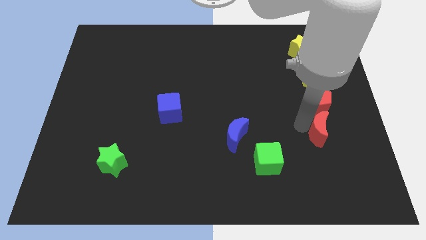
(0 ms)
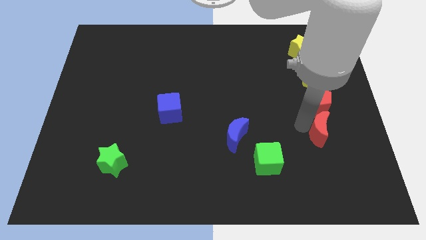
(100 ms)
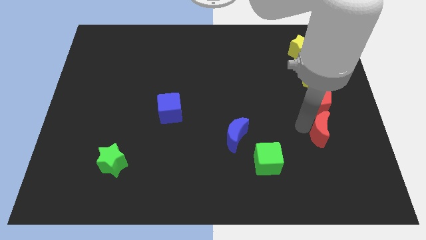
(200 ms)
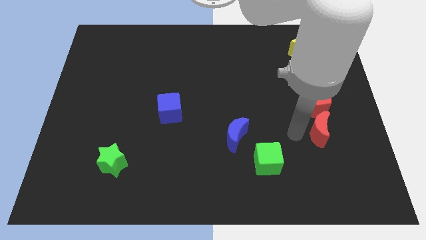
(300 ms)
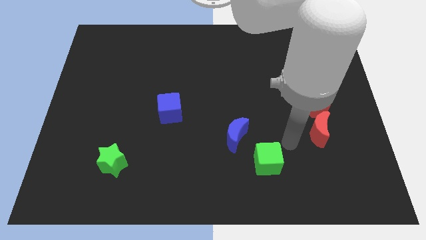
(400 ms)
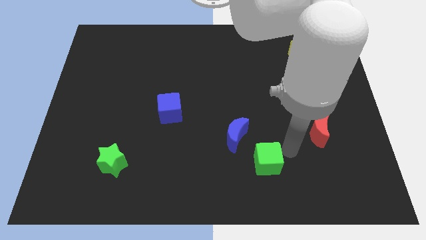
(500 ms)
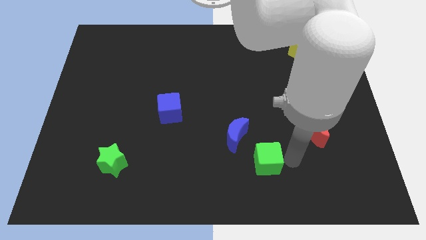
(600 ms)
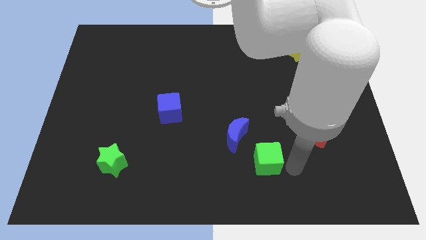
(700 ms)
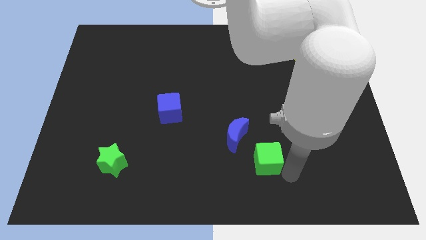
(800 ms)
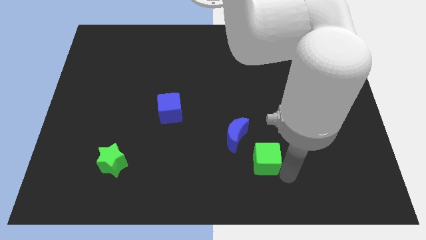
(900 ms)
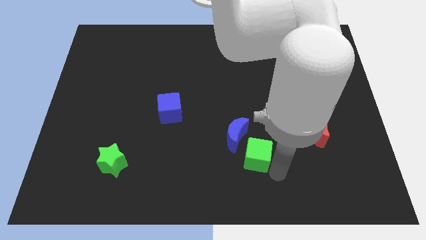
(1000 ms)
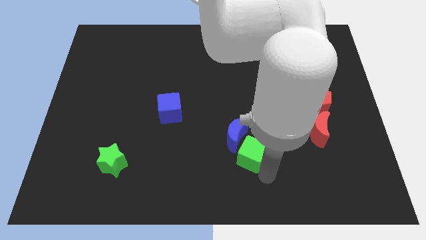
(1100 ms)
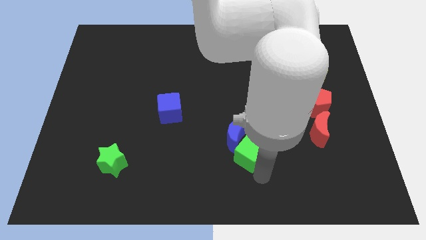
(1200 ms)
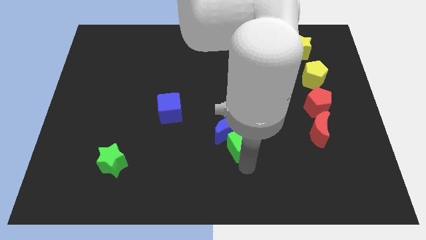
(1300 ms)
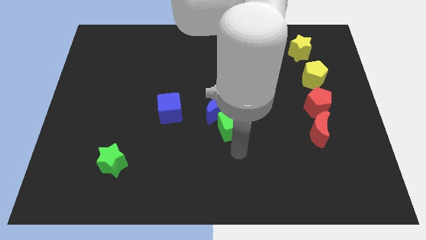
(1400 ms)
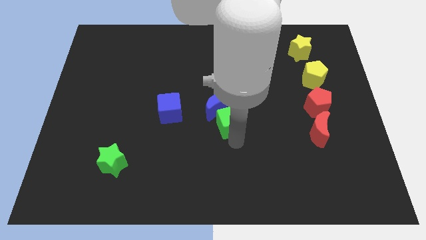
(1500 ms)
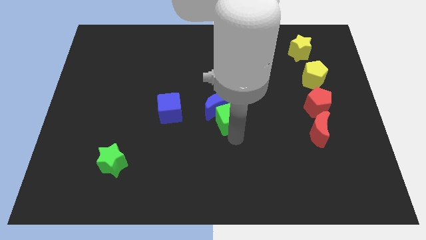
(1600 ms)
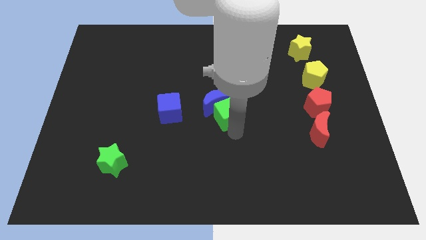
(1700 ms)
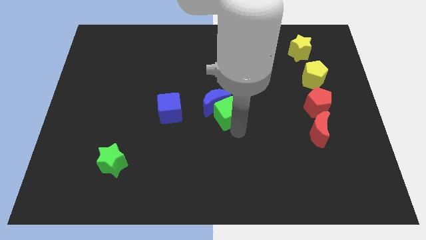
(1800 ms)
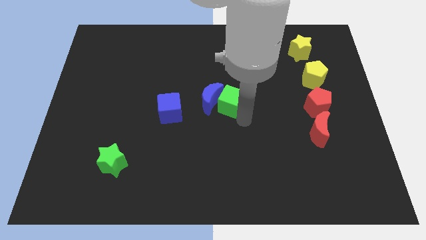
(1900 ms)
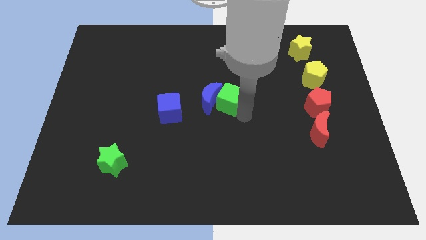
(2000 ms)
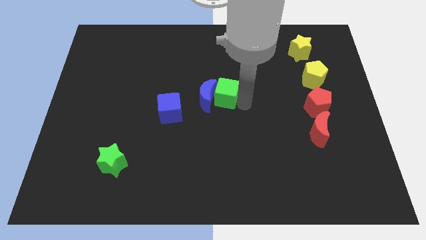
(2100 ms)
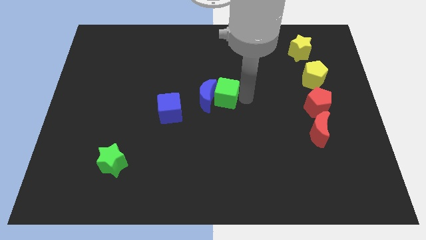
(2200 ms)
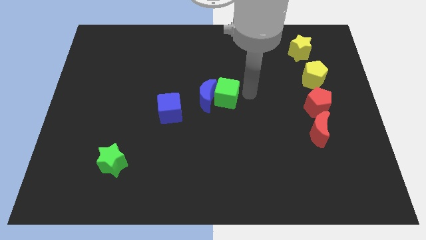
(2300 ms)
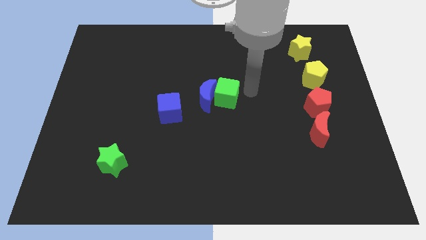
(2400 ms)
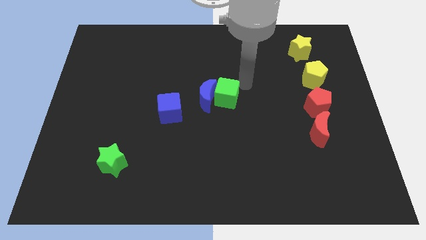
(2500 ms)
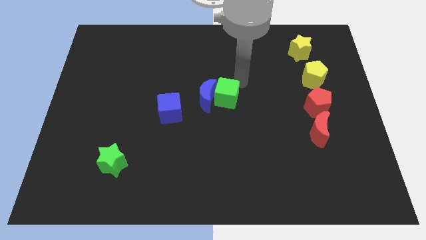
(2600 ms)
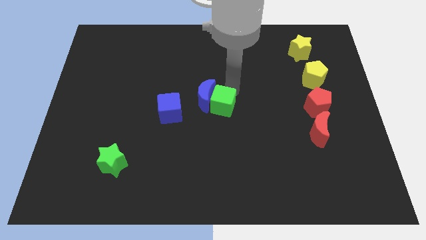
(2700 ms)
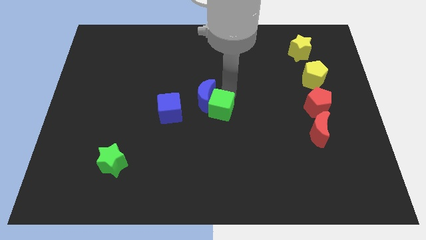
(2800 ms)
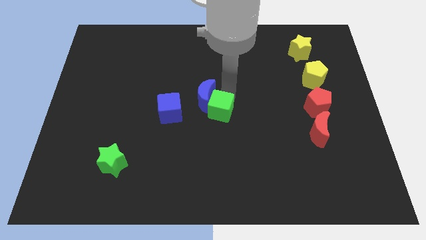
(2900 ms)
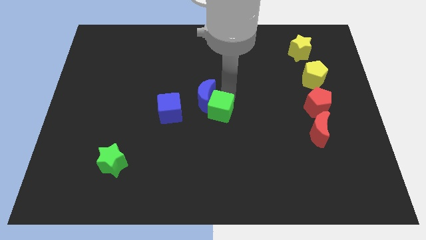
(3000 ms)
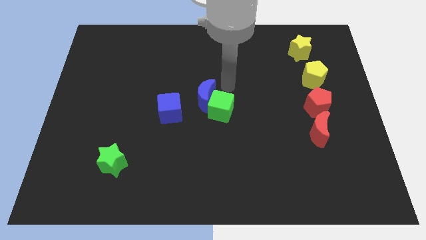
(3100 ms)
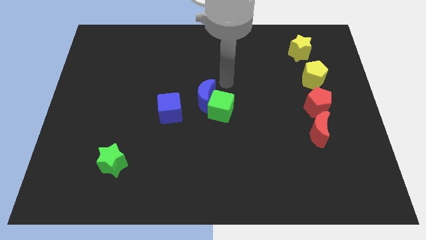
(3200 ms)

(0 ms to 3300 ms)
place the blue moon and green cube to the middle of the board

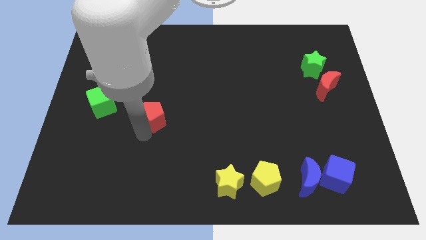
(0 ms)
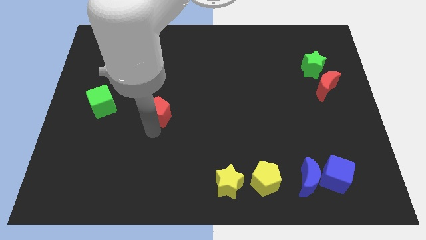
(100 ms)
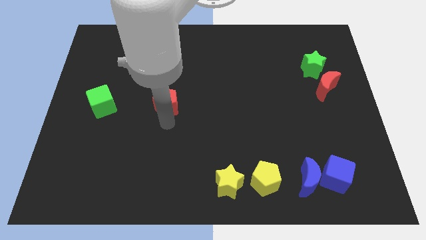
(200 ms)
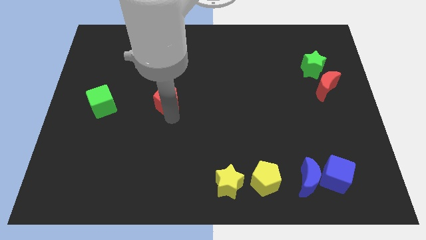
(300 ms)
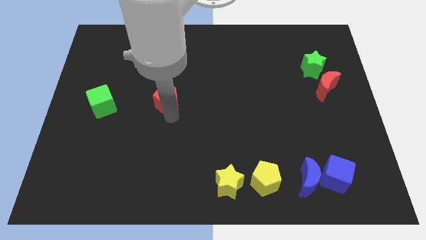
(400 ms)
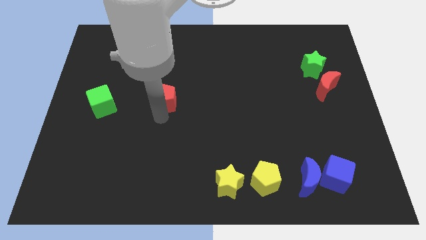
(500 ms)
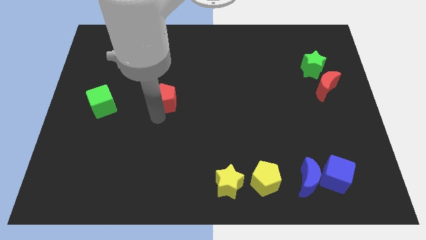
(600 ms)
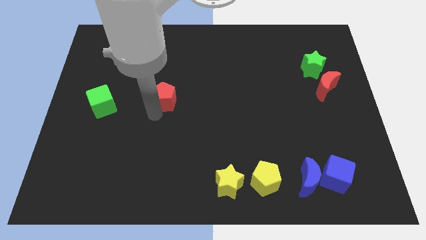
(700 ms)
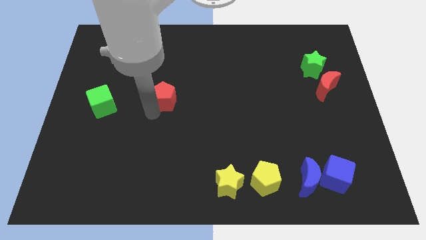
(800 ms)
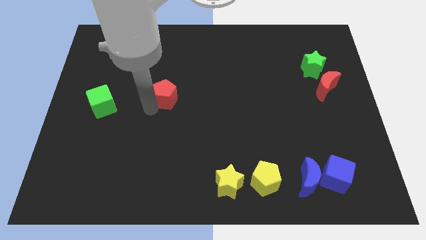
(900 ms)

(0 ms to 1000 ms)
push red pentagon upwards

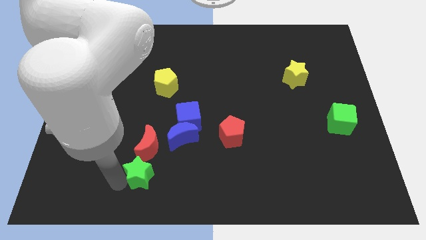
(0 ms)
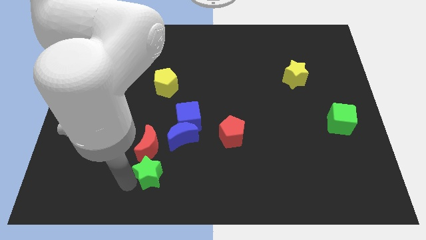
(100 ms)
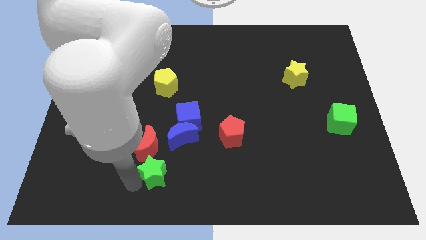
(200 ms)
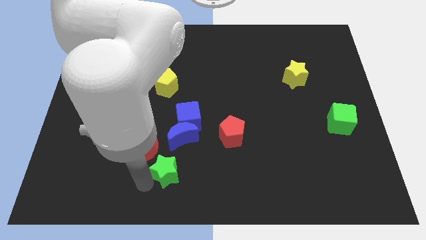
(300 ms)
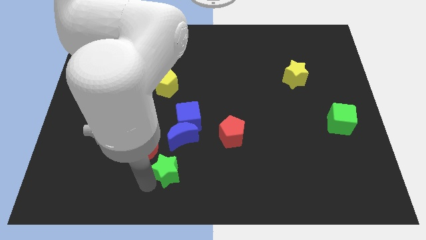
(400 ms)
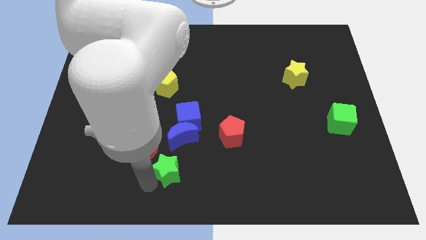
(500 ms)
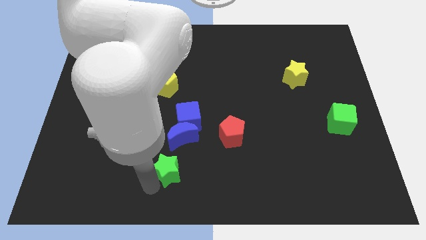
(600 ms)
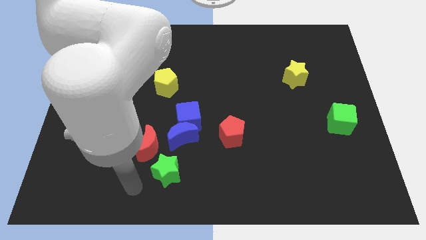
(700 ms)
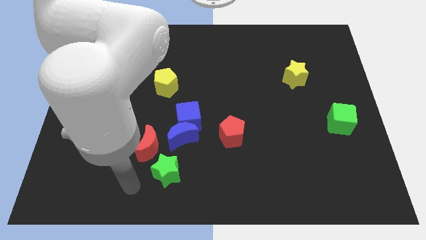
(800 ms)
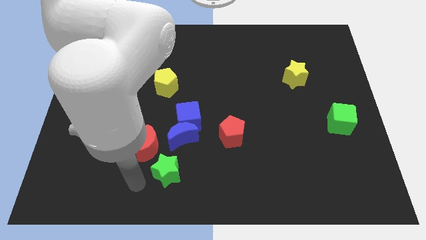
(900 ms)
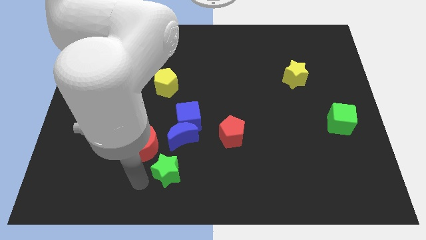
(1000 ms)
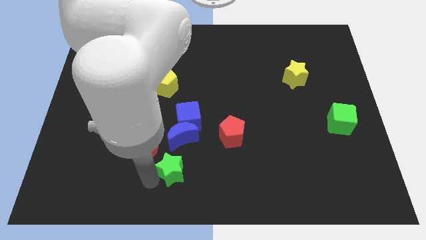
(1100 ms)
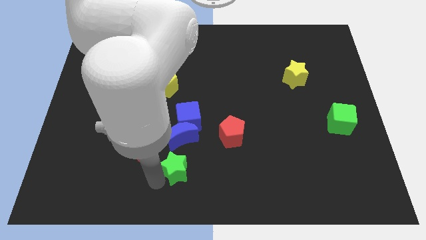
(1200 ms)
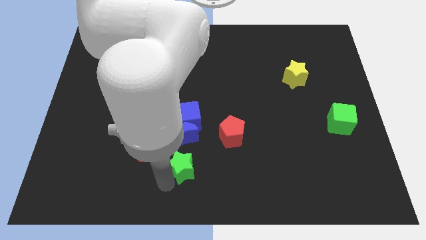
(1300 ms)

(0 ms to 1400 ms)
place green star to the bottom of blue crescent

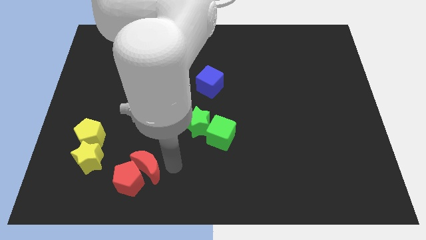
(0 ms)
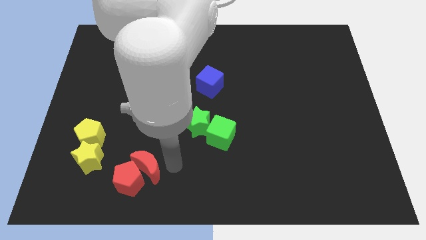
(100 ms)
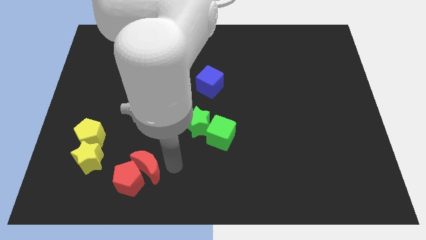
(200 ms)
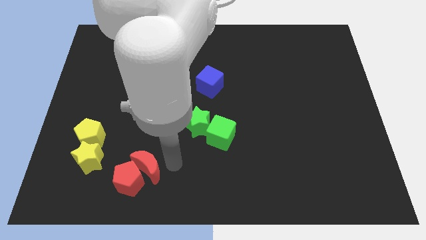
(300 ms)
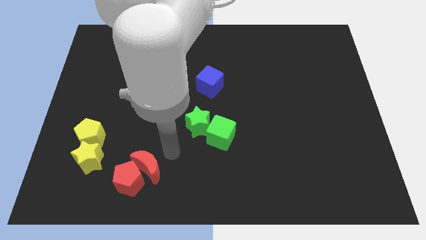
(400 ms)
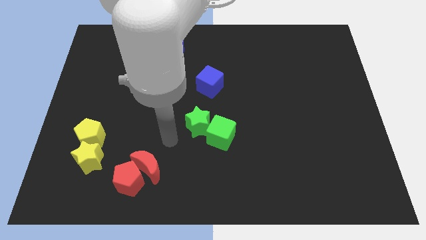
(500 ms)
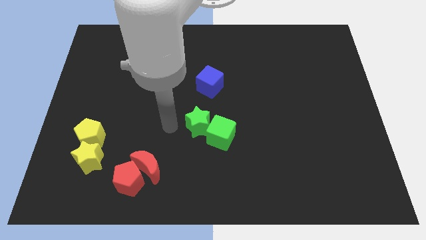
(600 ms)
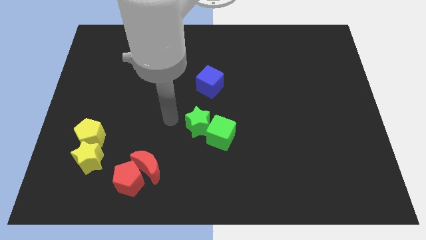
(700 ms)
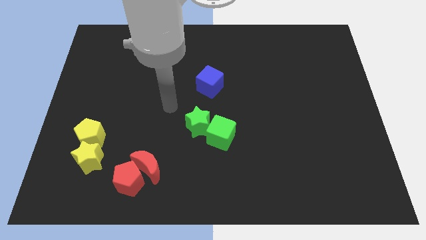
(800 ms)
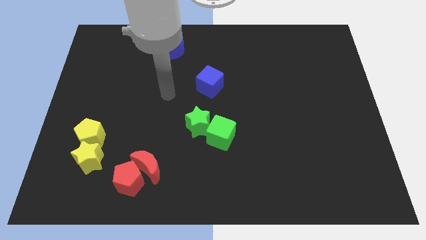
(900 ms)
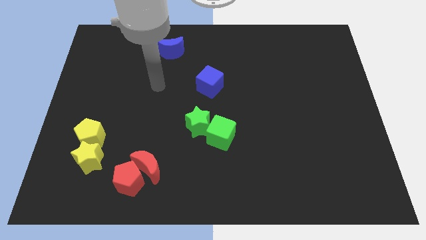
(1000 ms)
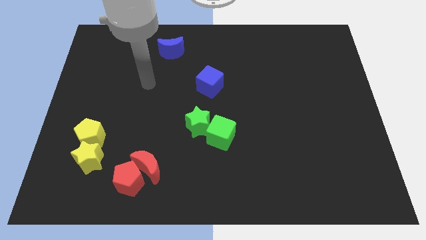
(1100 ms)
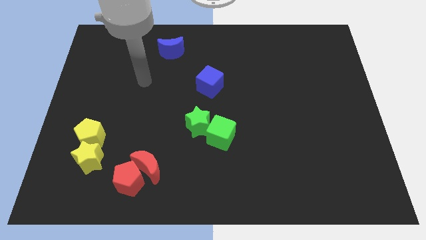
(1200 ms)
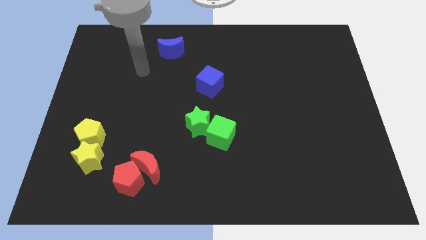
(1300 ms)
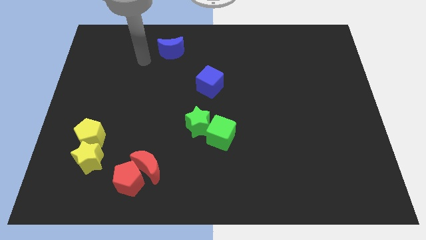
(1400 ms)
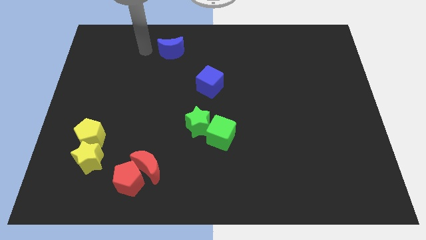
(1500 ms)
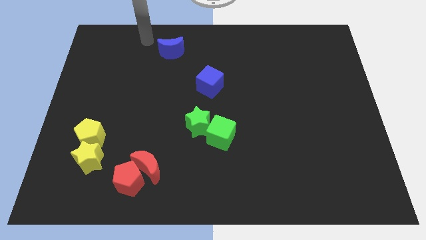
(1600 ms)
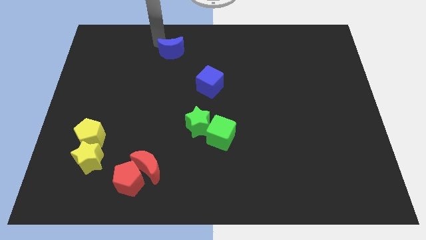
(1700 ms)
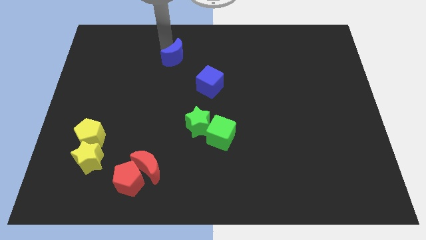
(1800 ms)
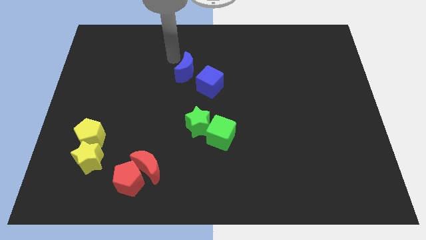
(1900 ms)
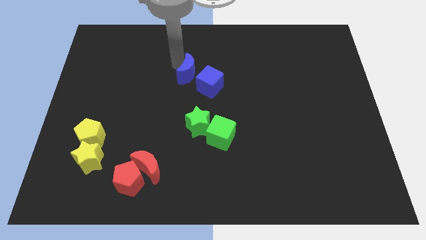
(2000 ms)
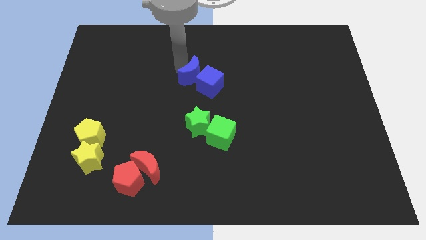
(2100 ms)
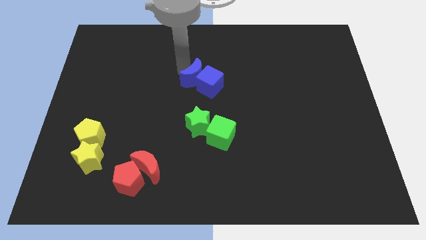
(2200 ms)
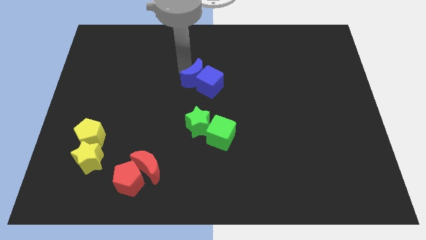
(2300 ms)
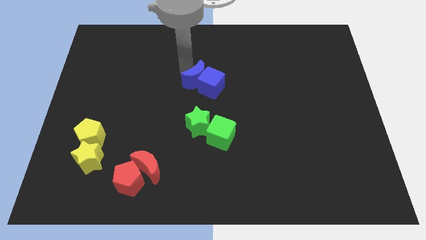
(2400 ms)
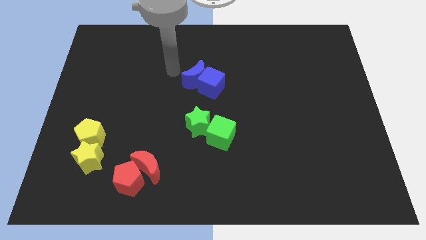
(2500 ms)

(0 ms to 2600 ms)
place the blue moon into the blue cube

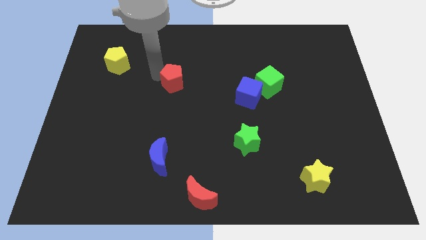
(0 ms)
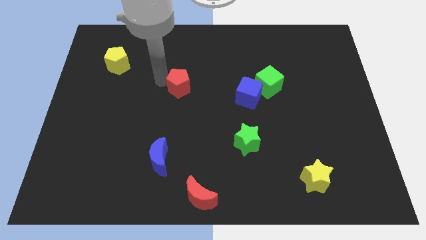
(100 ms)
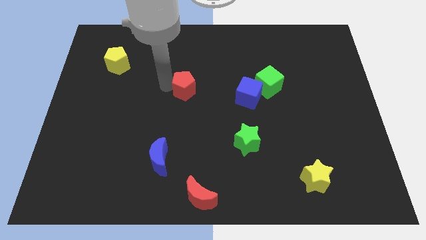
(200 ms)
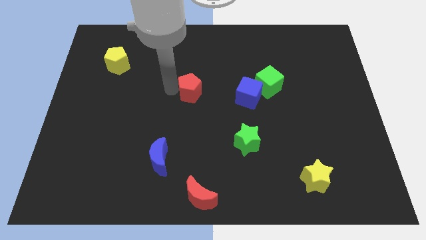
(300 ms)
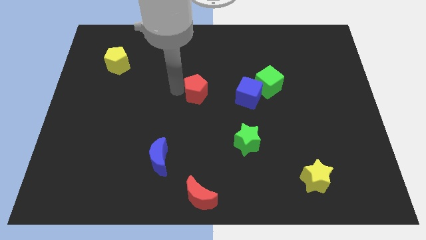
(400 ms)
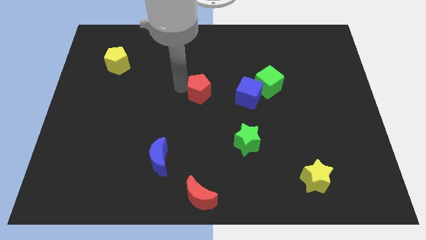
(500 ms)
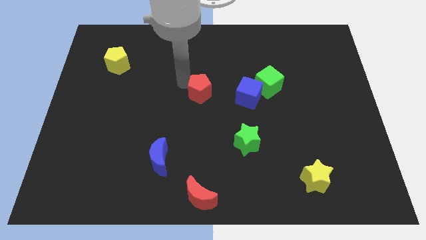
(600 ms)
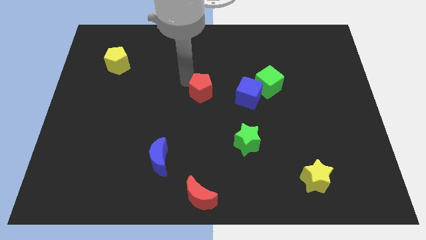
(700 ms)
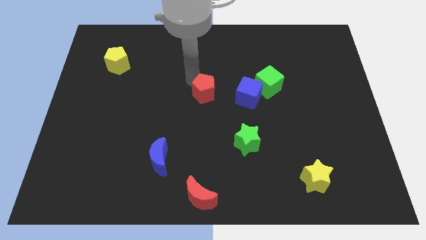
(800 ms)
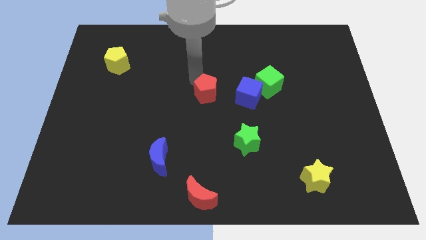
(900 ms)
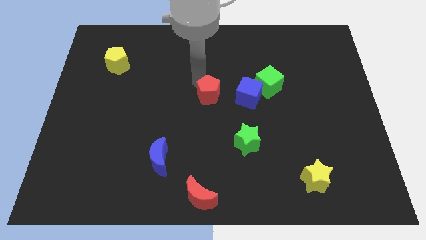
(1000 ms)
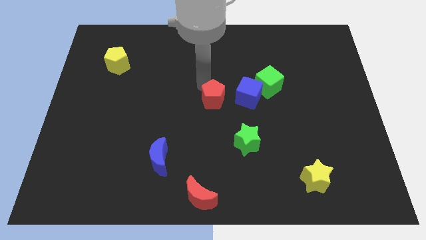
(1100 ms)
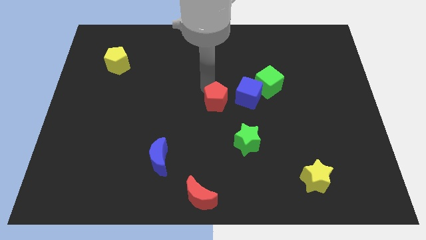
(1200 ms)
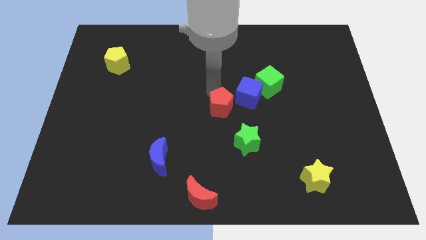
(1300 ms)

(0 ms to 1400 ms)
push the red pentagon to the left of the blue cube
